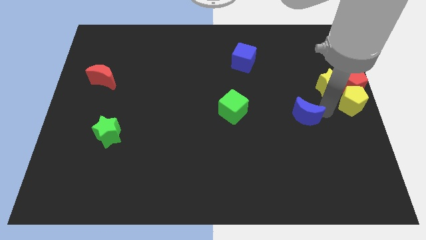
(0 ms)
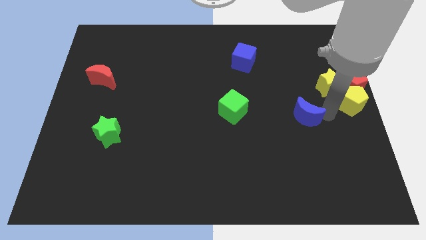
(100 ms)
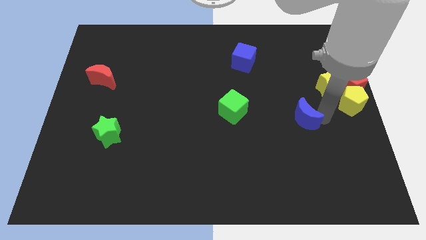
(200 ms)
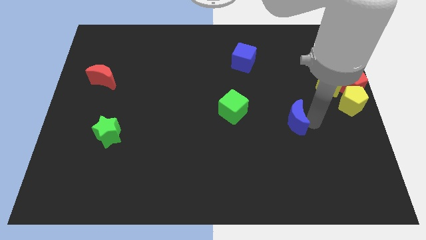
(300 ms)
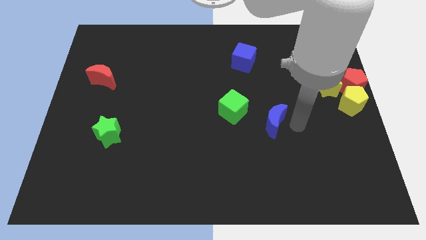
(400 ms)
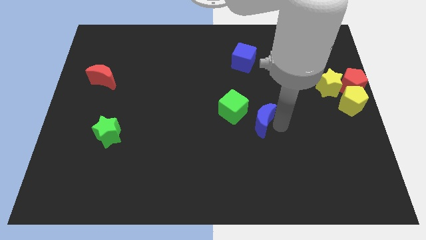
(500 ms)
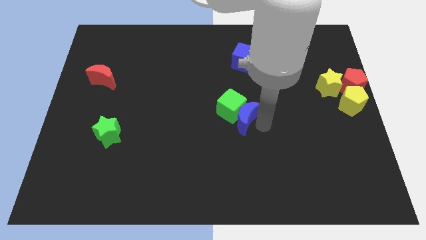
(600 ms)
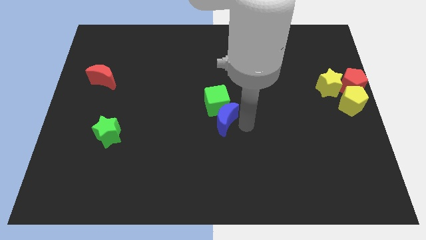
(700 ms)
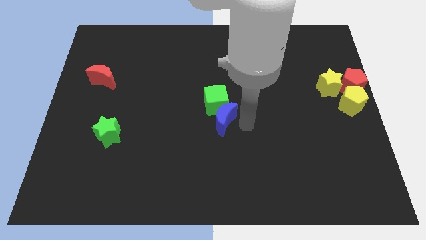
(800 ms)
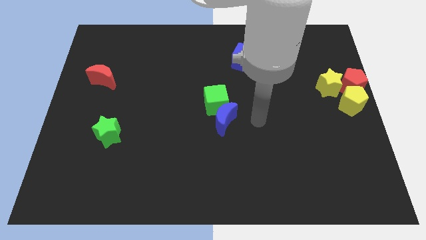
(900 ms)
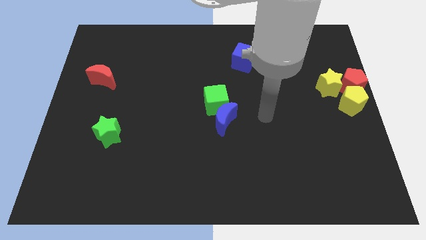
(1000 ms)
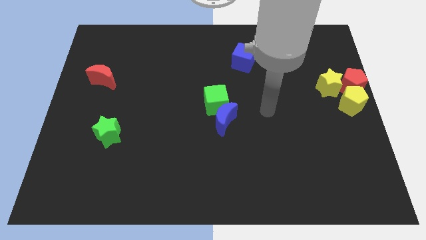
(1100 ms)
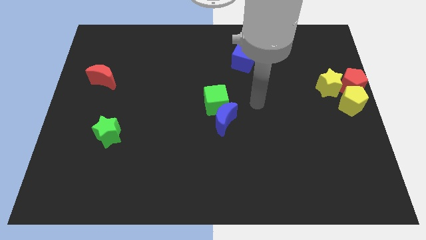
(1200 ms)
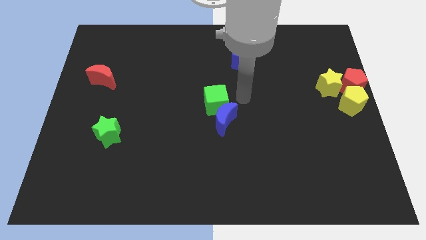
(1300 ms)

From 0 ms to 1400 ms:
push the blue moon into the green cube

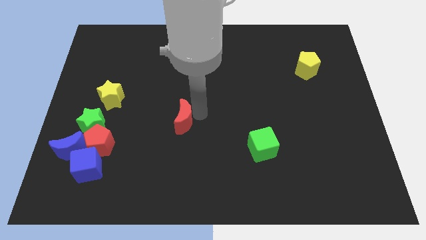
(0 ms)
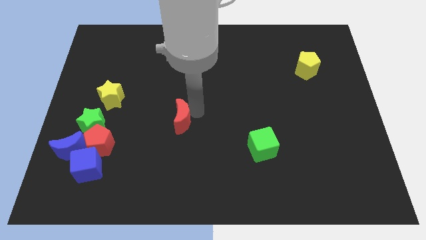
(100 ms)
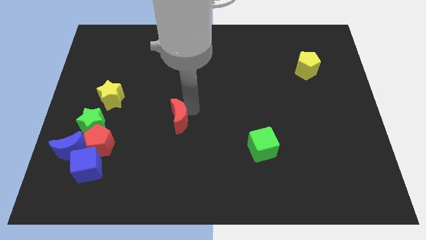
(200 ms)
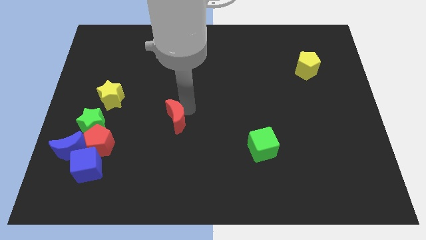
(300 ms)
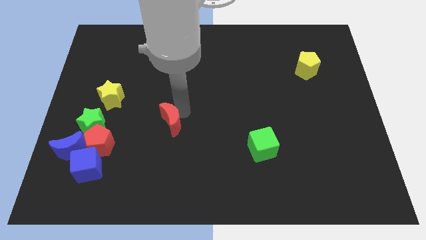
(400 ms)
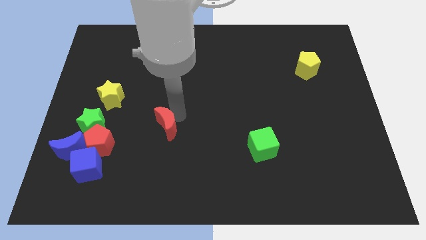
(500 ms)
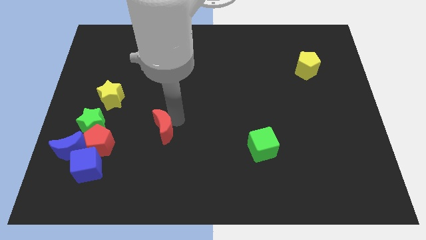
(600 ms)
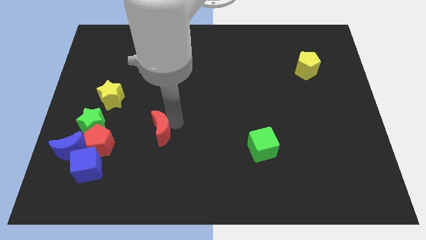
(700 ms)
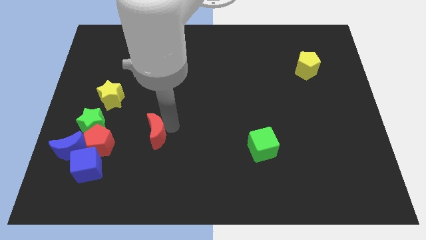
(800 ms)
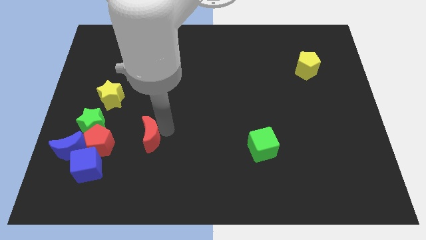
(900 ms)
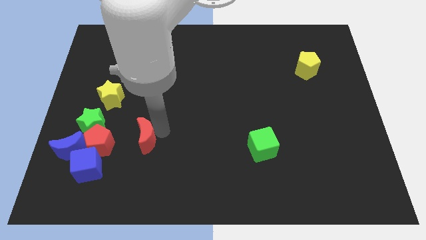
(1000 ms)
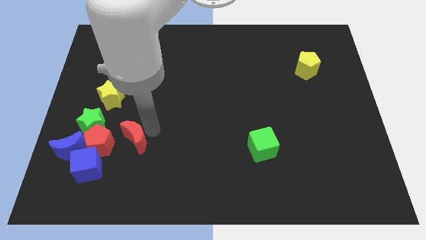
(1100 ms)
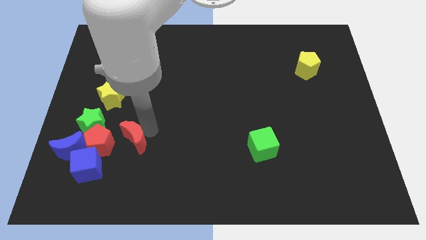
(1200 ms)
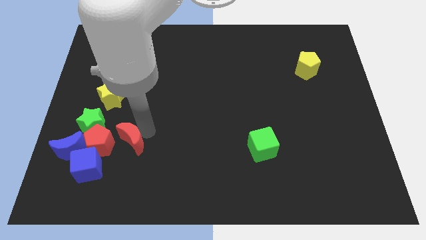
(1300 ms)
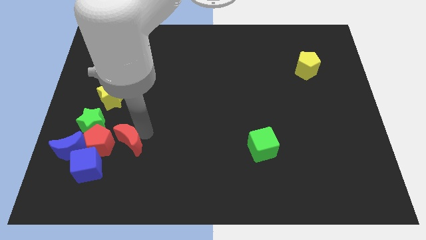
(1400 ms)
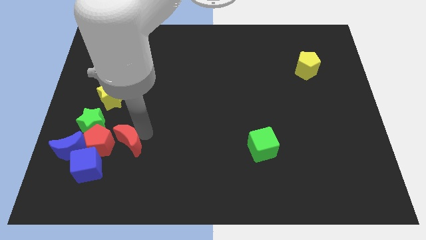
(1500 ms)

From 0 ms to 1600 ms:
move the red crescent right to the red pentagon

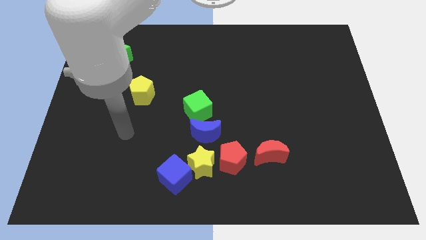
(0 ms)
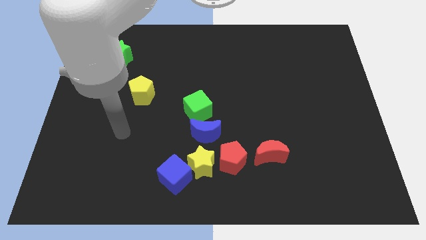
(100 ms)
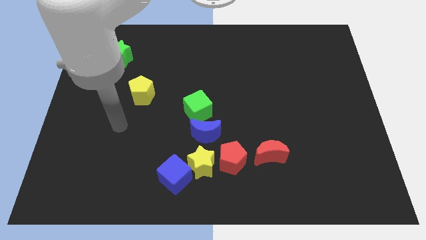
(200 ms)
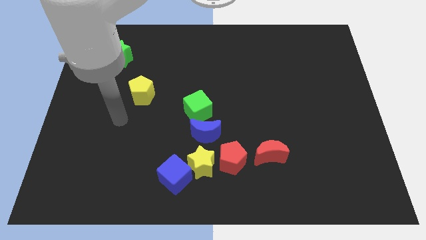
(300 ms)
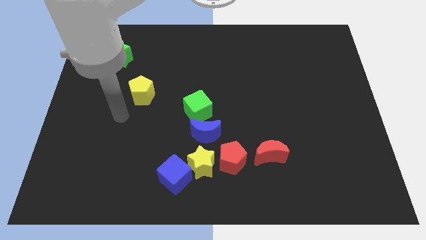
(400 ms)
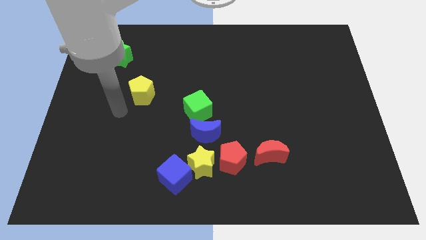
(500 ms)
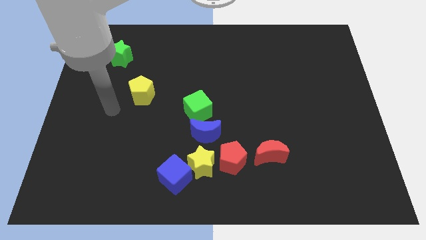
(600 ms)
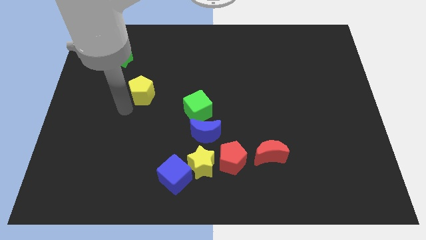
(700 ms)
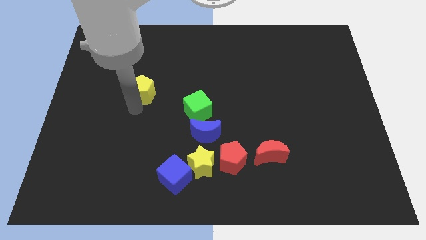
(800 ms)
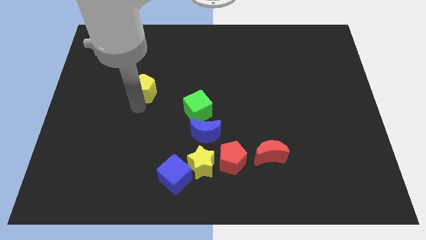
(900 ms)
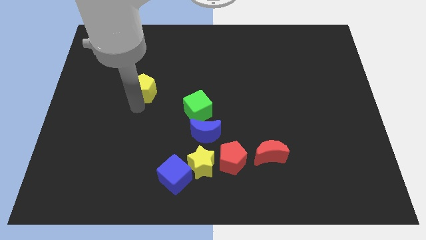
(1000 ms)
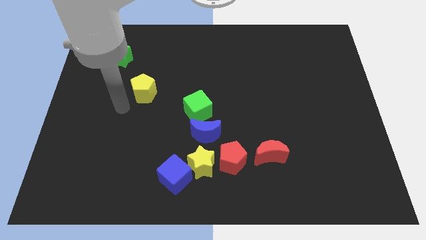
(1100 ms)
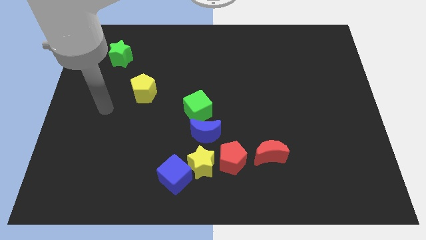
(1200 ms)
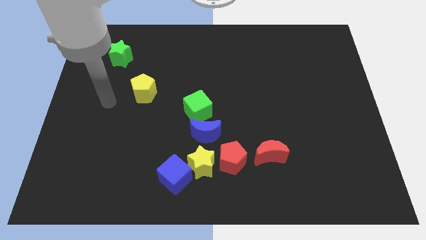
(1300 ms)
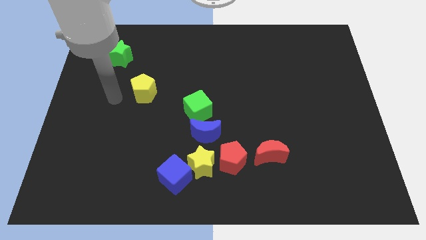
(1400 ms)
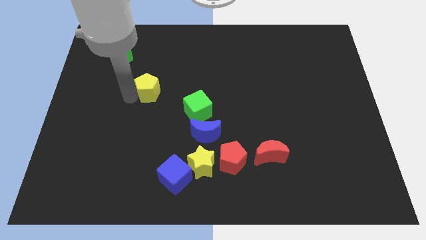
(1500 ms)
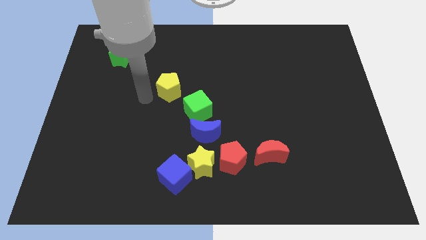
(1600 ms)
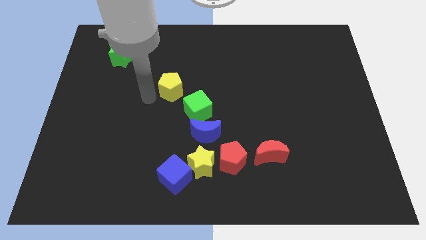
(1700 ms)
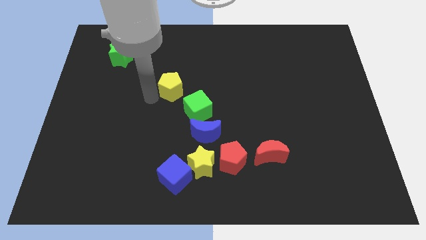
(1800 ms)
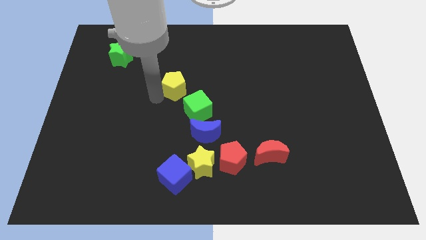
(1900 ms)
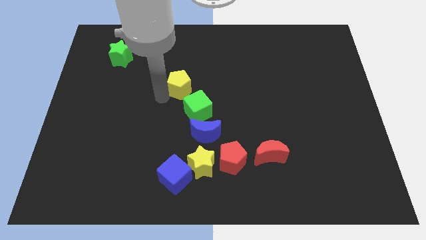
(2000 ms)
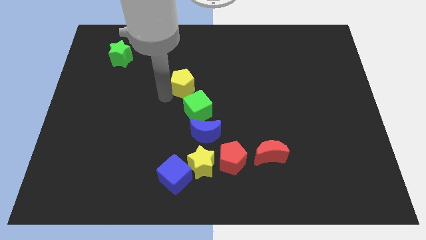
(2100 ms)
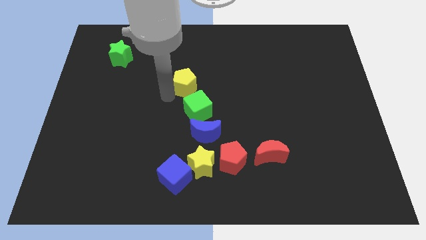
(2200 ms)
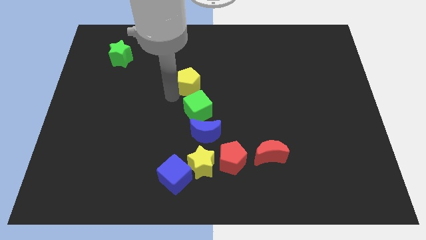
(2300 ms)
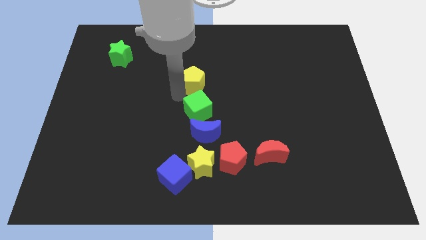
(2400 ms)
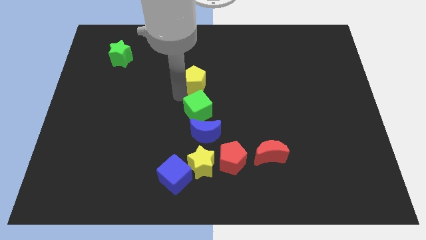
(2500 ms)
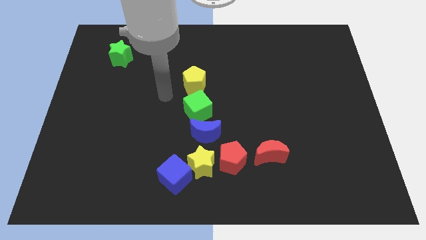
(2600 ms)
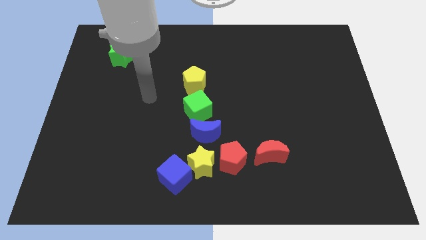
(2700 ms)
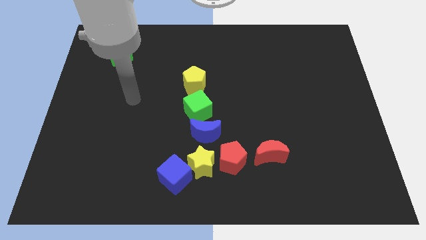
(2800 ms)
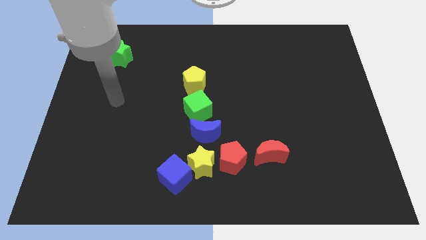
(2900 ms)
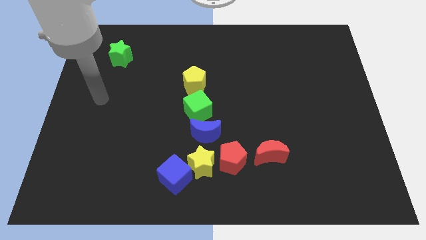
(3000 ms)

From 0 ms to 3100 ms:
move yellow pentagon above green cube

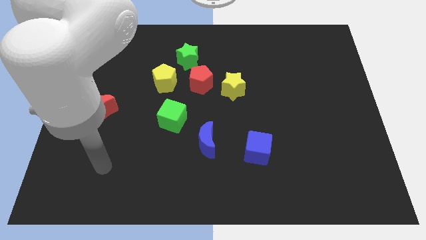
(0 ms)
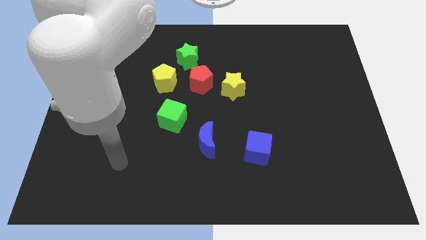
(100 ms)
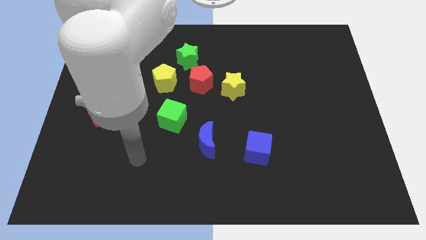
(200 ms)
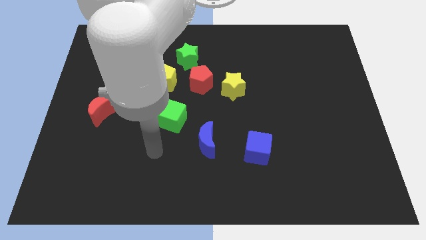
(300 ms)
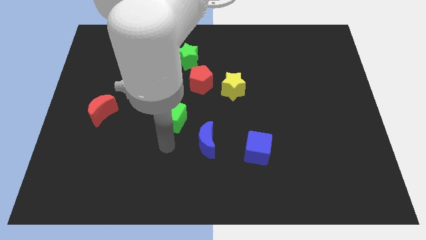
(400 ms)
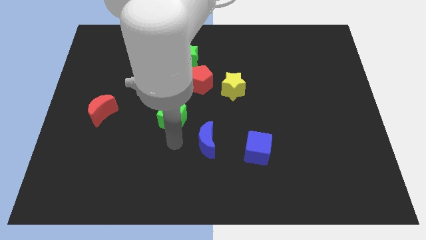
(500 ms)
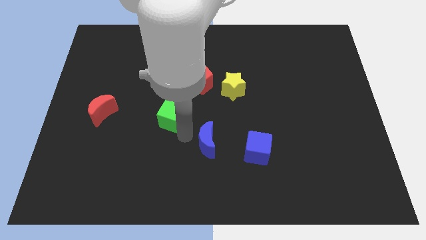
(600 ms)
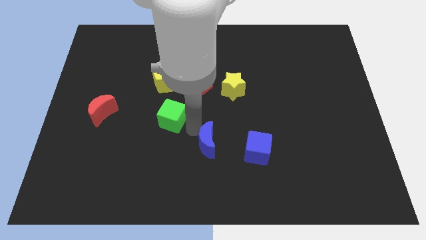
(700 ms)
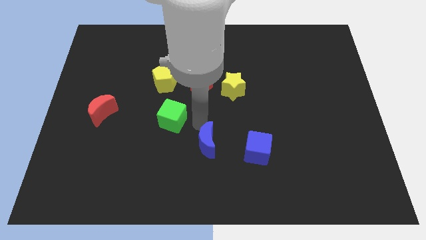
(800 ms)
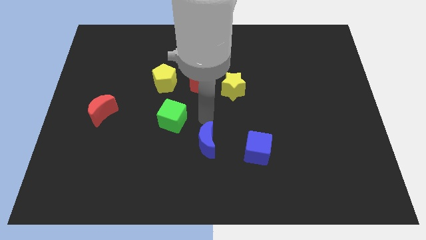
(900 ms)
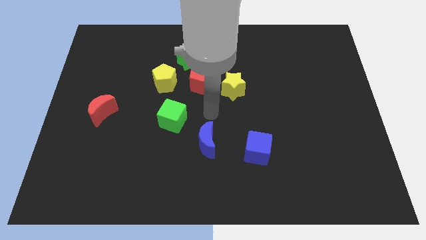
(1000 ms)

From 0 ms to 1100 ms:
place your hand at the top of the blue crescent

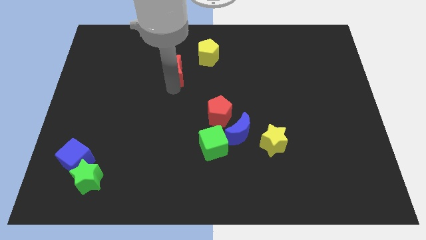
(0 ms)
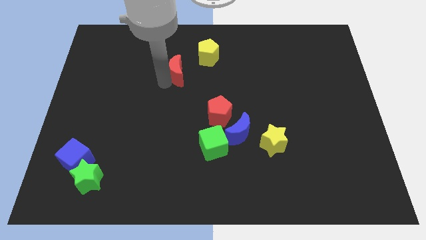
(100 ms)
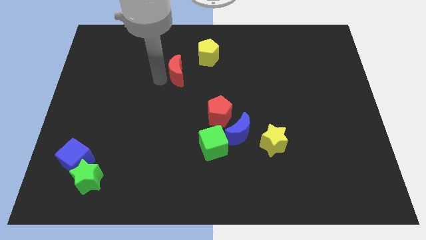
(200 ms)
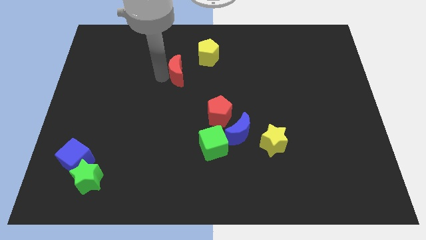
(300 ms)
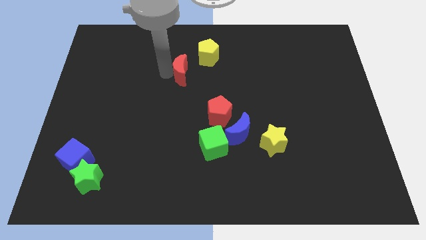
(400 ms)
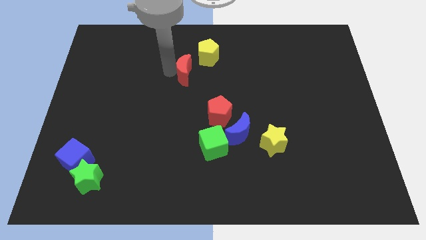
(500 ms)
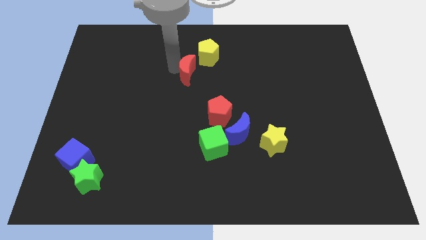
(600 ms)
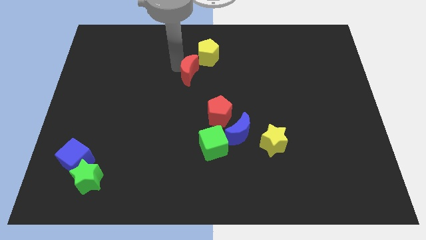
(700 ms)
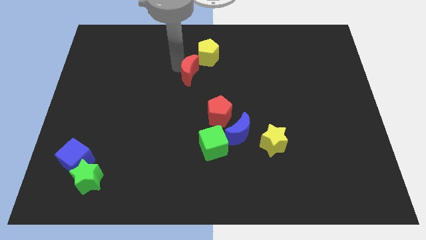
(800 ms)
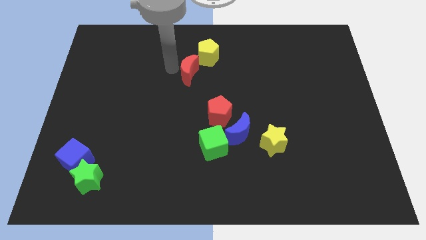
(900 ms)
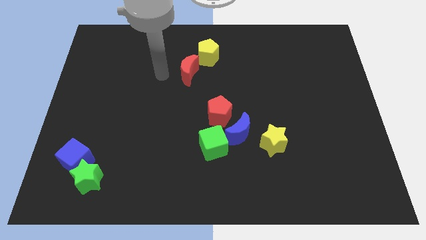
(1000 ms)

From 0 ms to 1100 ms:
make the red crescent touch the bottom left of the yellow pentagon

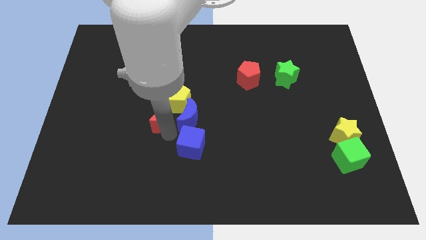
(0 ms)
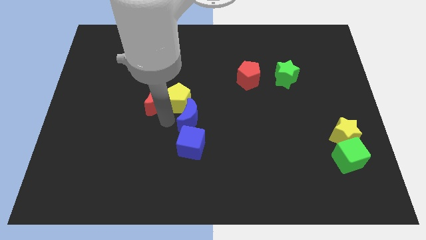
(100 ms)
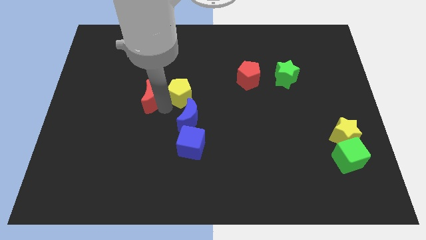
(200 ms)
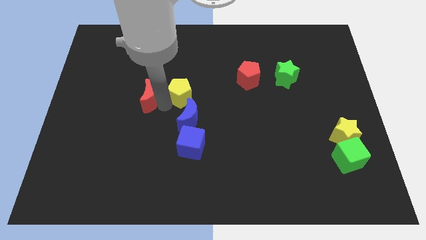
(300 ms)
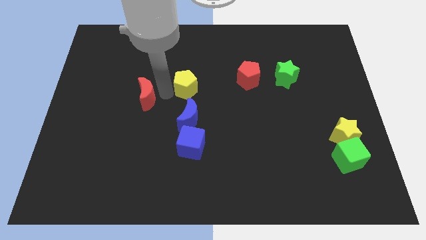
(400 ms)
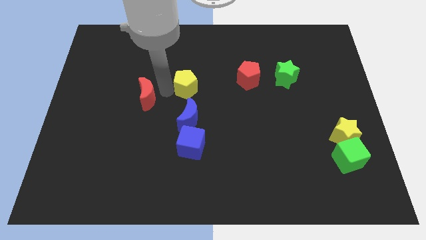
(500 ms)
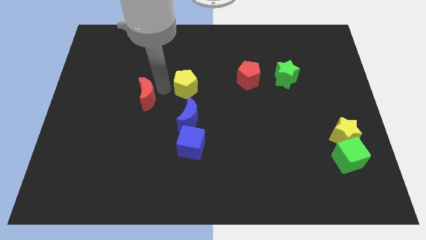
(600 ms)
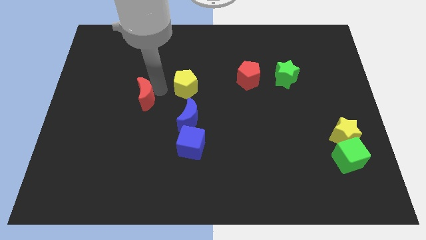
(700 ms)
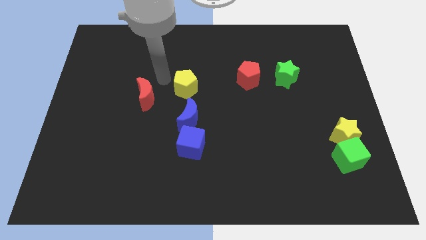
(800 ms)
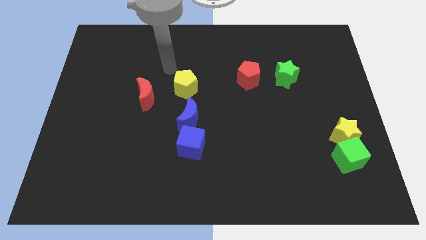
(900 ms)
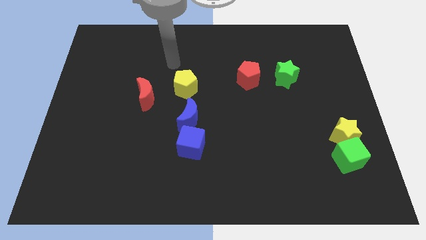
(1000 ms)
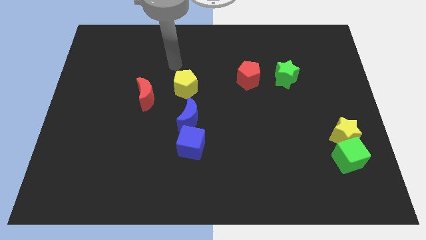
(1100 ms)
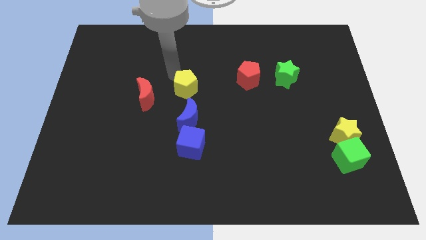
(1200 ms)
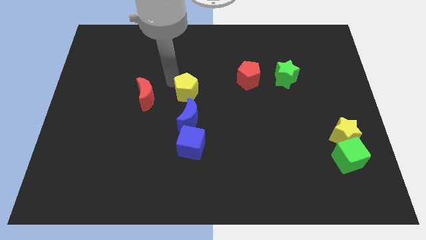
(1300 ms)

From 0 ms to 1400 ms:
separate the yellow pentagon from the red crescent
